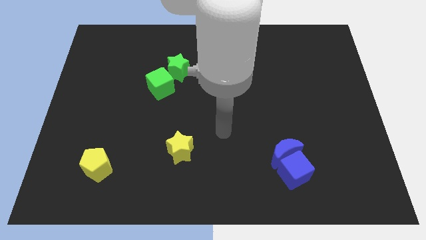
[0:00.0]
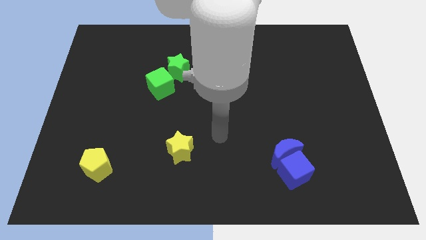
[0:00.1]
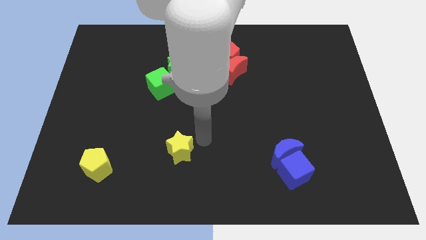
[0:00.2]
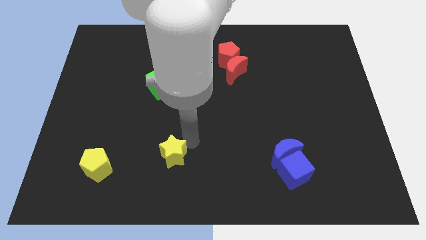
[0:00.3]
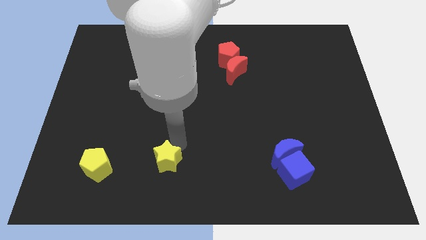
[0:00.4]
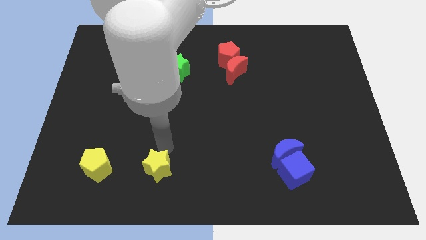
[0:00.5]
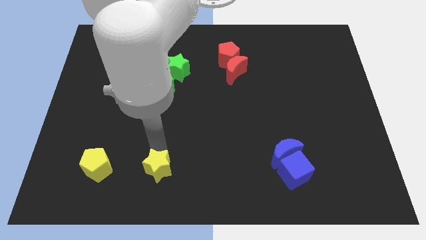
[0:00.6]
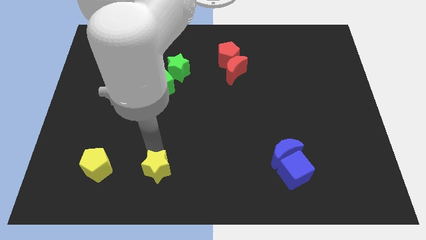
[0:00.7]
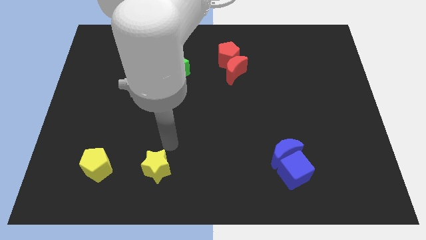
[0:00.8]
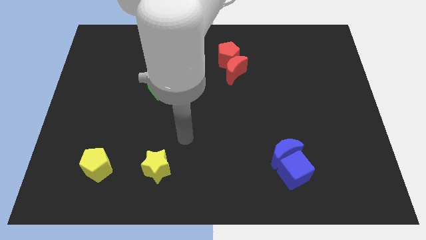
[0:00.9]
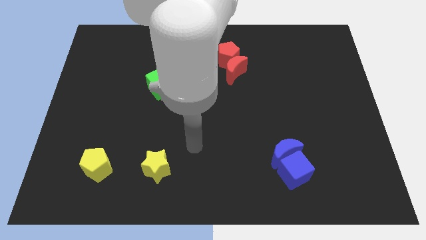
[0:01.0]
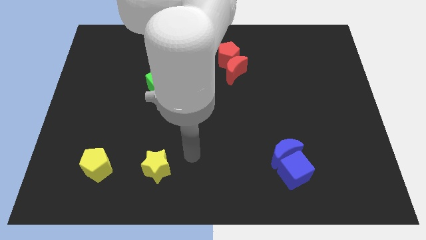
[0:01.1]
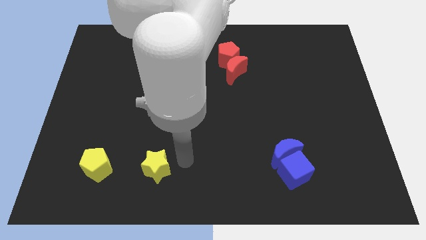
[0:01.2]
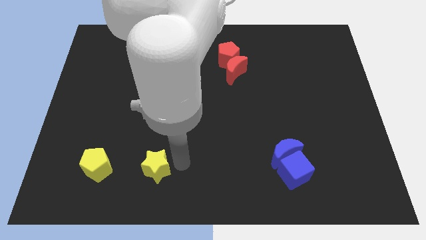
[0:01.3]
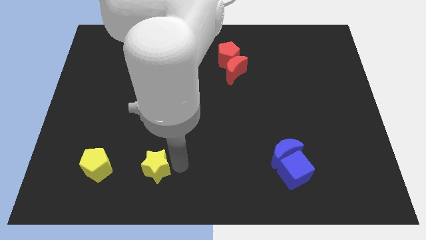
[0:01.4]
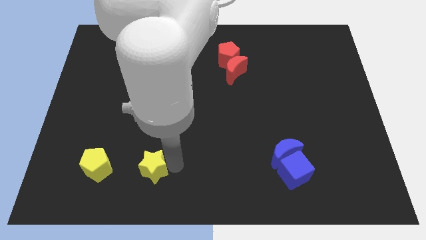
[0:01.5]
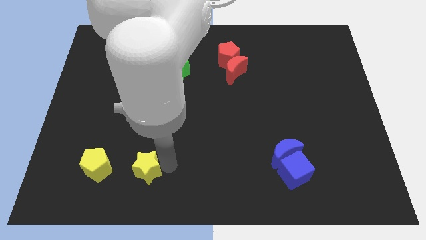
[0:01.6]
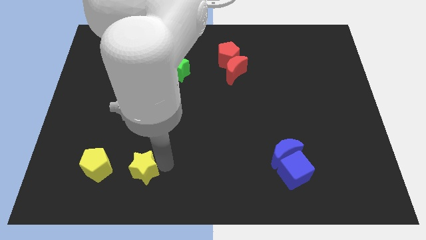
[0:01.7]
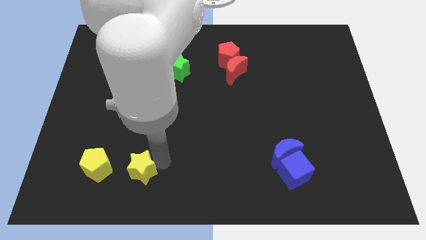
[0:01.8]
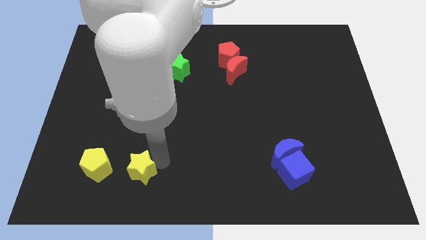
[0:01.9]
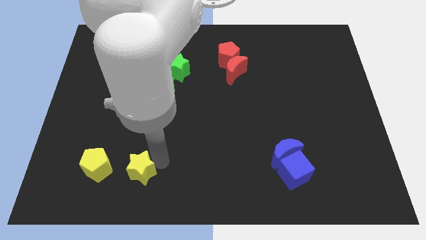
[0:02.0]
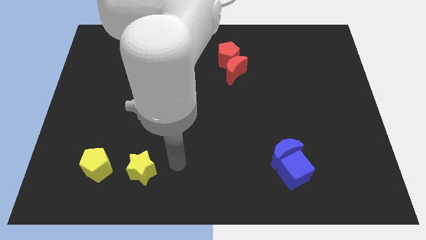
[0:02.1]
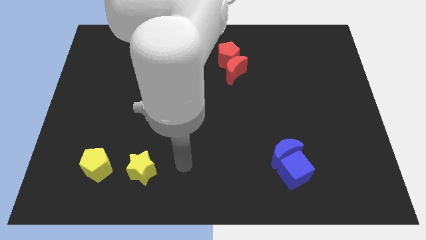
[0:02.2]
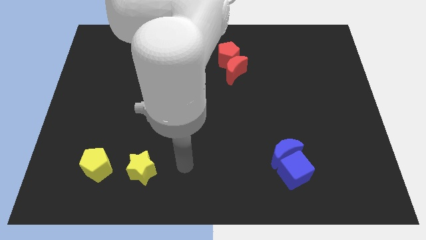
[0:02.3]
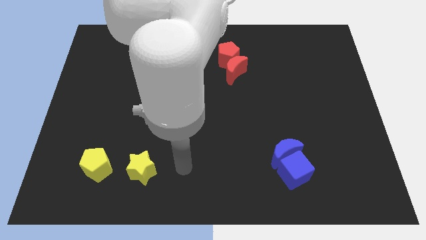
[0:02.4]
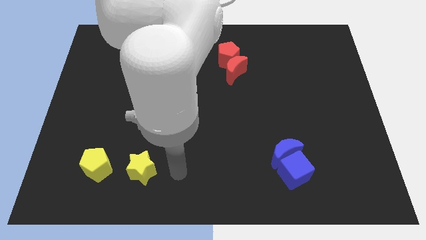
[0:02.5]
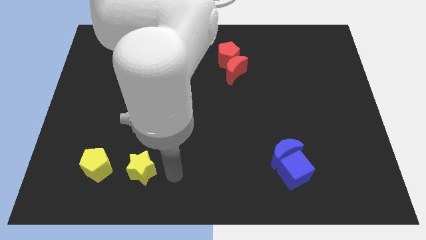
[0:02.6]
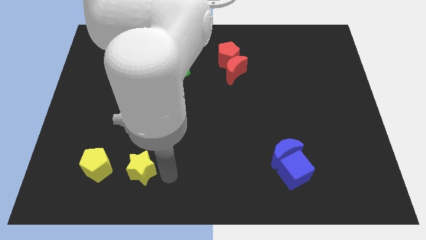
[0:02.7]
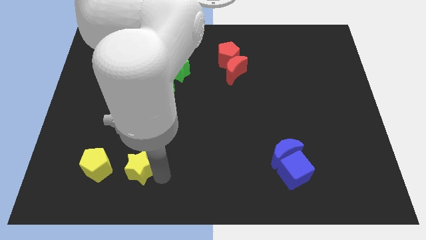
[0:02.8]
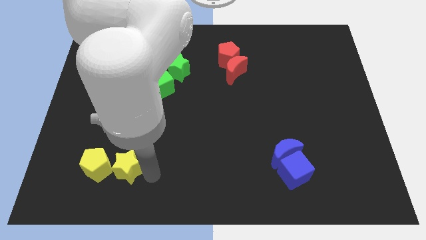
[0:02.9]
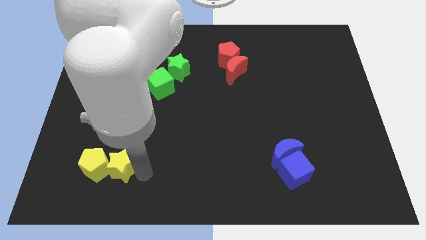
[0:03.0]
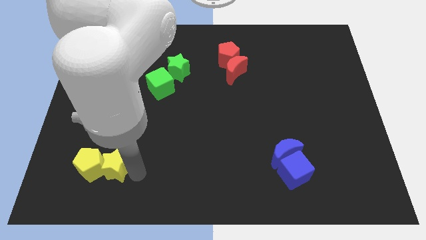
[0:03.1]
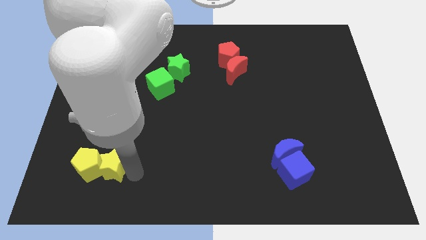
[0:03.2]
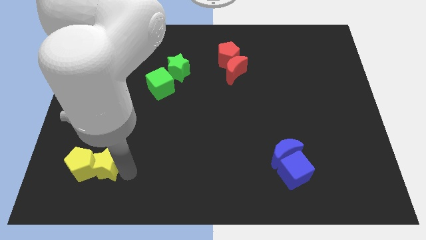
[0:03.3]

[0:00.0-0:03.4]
push yellow star into yellow pentagon

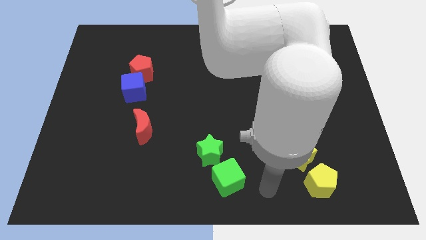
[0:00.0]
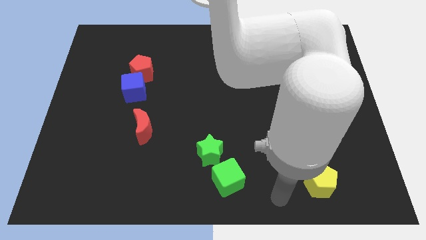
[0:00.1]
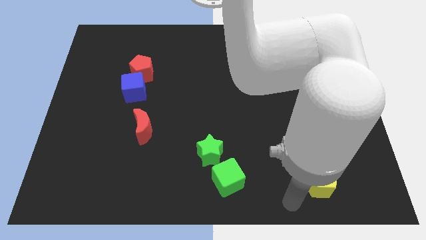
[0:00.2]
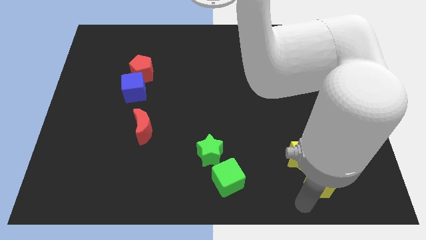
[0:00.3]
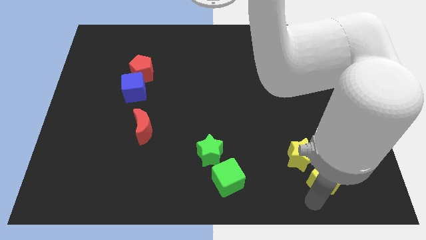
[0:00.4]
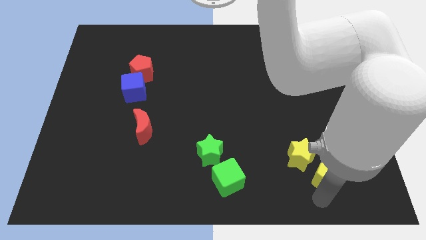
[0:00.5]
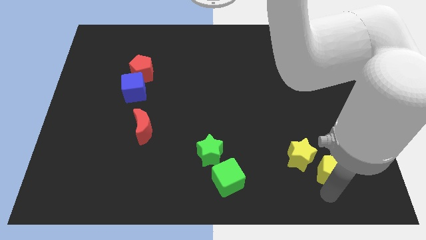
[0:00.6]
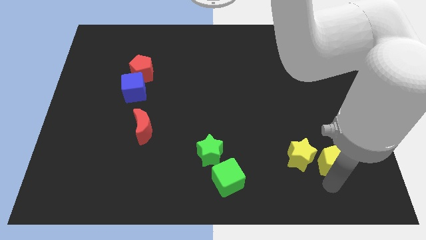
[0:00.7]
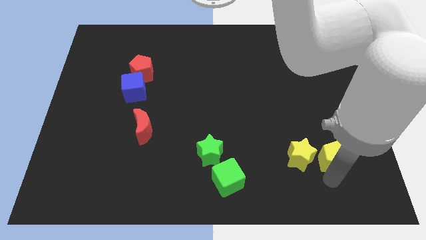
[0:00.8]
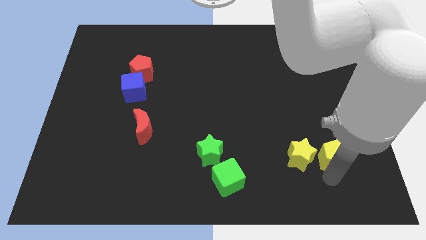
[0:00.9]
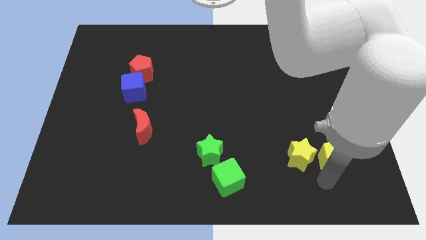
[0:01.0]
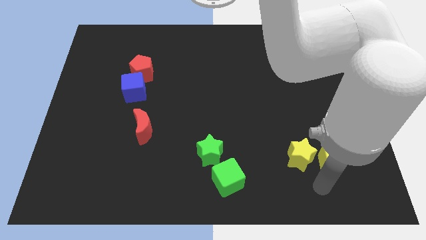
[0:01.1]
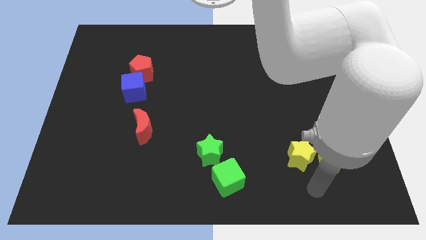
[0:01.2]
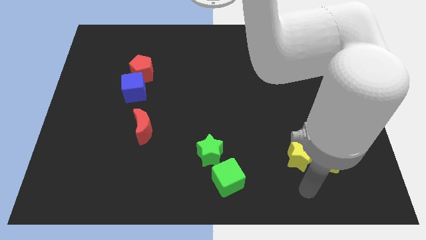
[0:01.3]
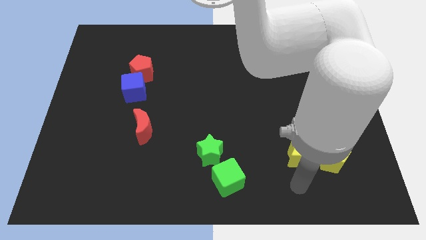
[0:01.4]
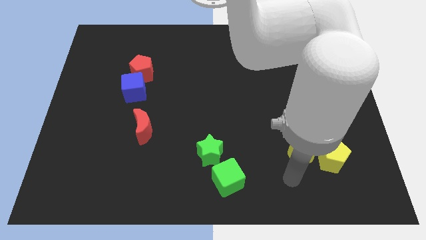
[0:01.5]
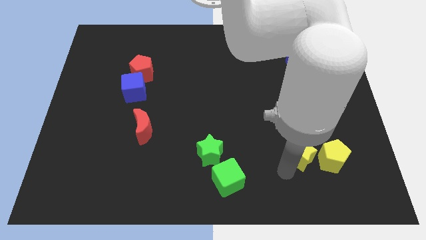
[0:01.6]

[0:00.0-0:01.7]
move the yellow penatgon to the right of the yellow star

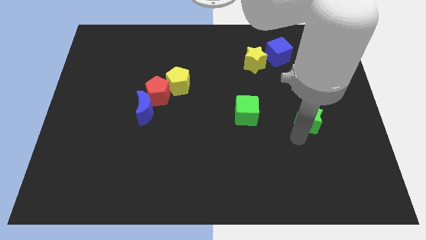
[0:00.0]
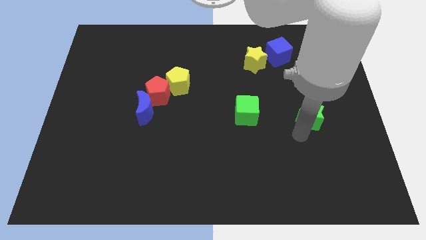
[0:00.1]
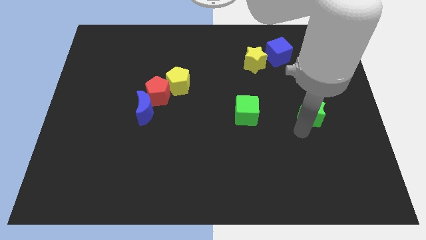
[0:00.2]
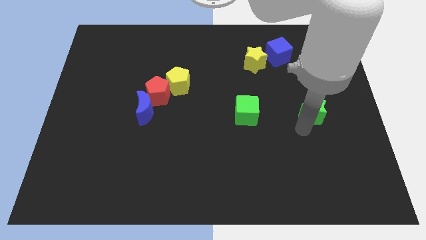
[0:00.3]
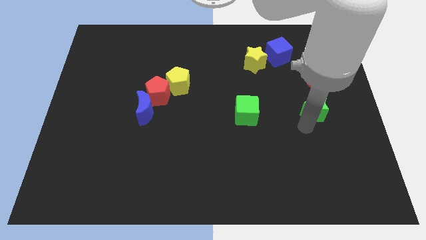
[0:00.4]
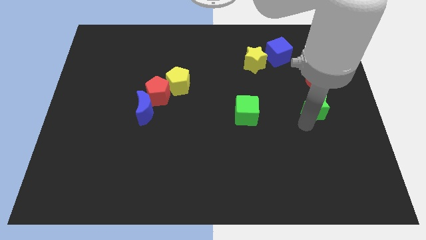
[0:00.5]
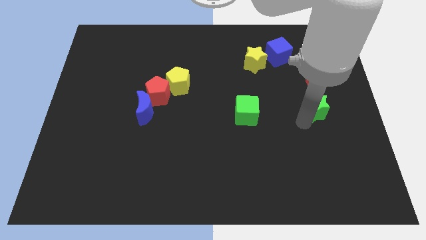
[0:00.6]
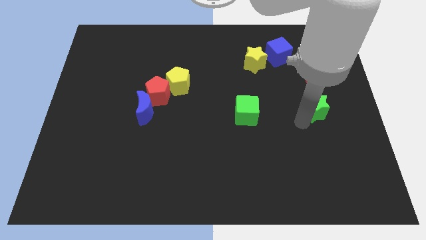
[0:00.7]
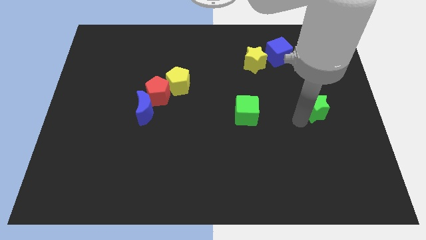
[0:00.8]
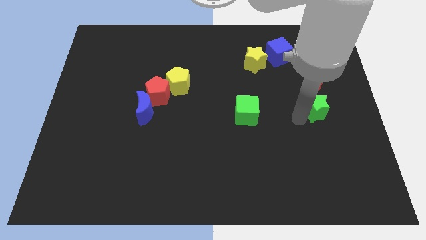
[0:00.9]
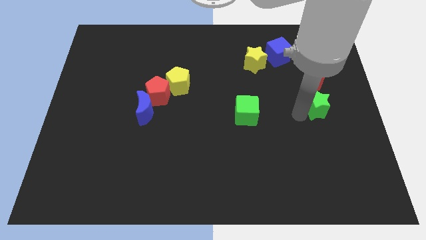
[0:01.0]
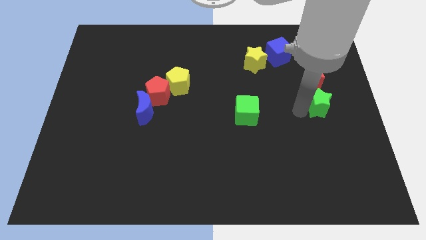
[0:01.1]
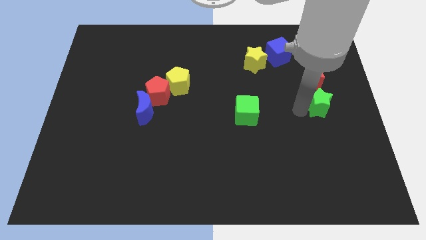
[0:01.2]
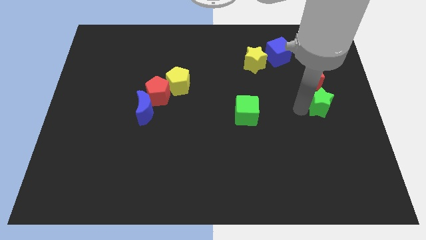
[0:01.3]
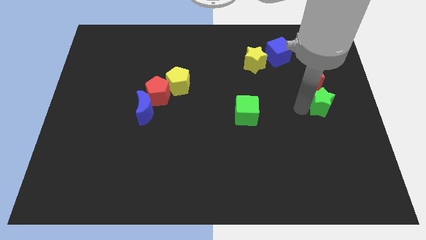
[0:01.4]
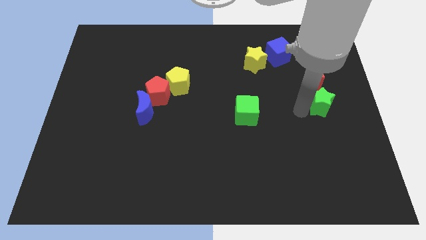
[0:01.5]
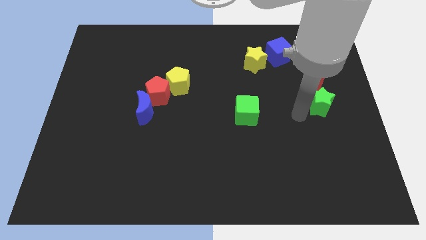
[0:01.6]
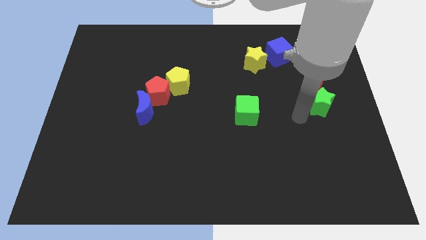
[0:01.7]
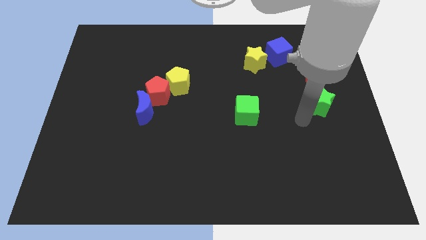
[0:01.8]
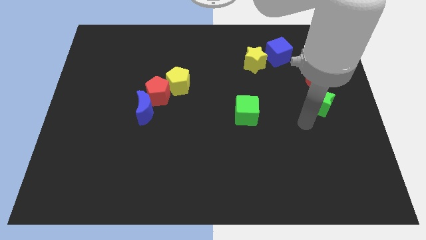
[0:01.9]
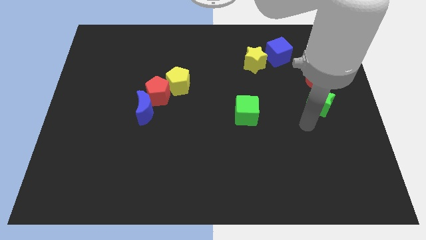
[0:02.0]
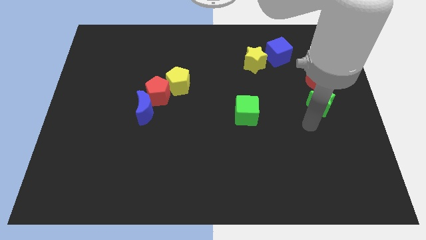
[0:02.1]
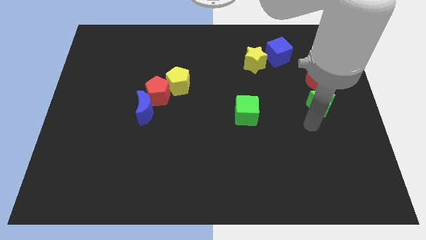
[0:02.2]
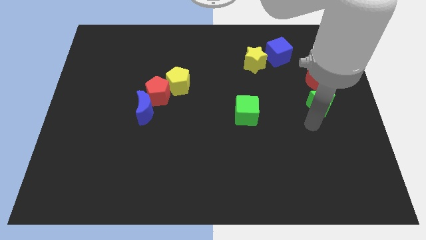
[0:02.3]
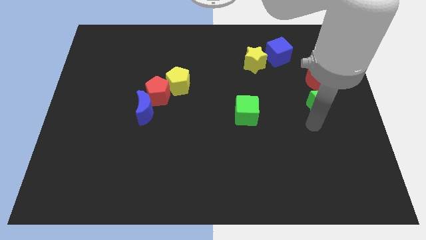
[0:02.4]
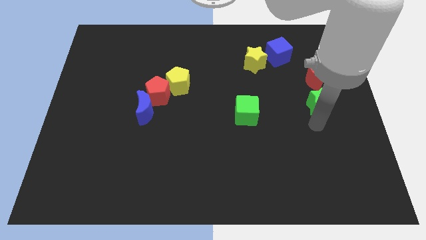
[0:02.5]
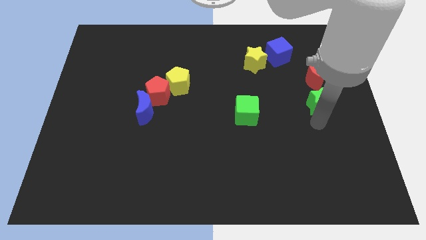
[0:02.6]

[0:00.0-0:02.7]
move the green star into the red crescent

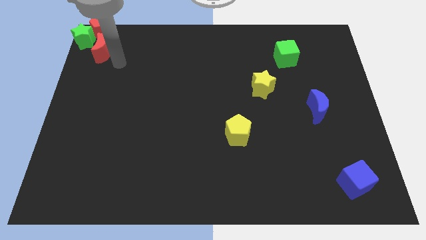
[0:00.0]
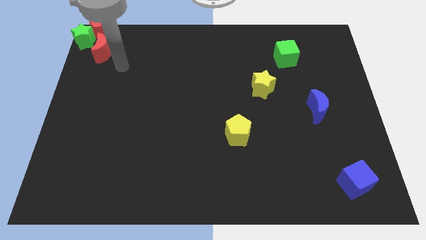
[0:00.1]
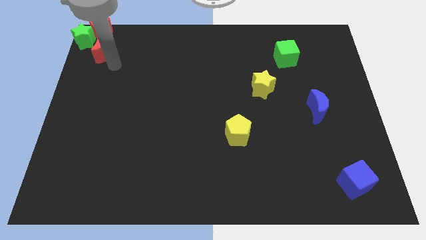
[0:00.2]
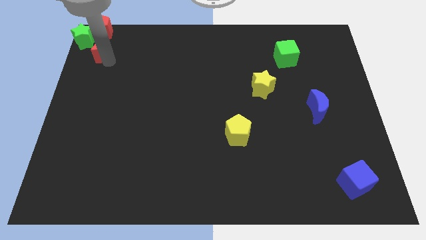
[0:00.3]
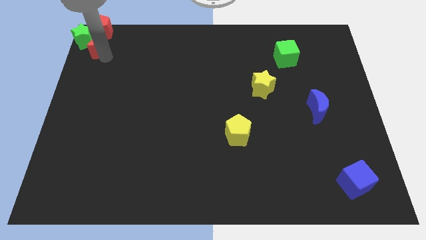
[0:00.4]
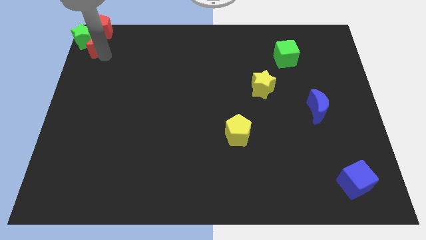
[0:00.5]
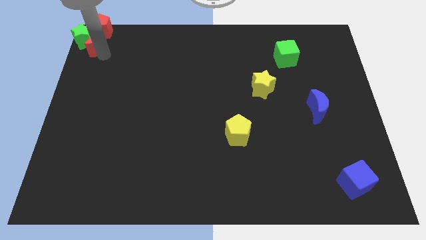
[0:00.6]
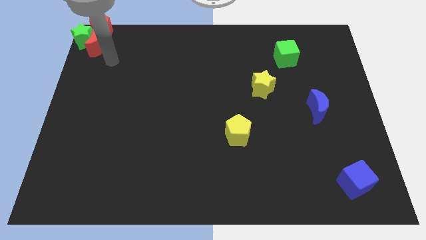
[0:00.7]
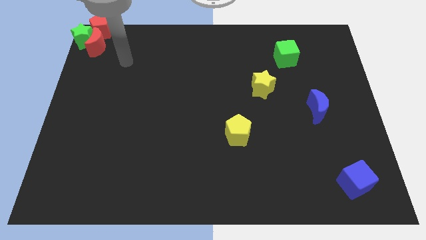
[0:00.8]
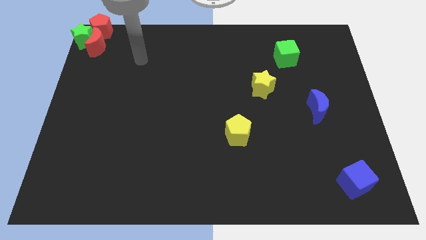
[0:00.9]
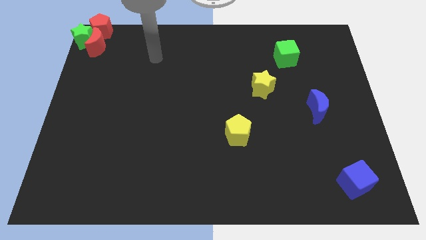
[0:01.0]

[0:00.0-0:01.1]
place the red crescent close to the green star
